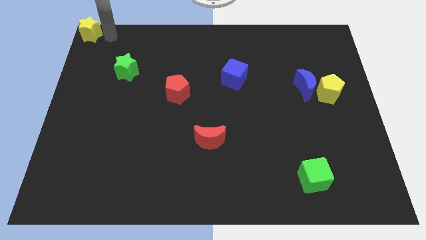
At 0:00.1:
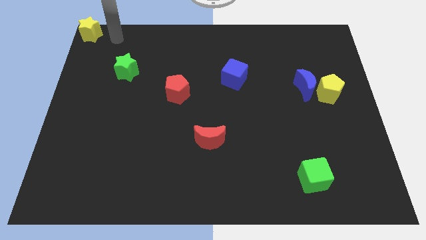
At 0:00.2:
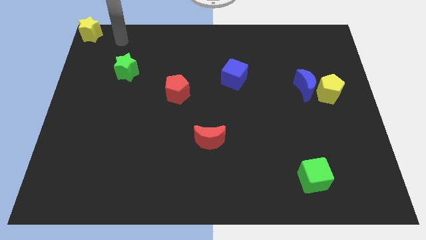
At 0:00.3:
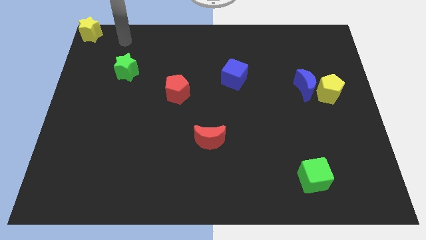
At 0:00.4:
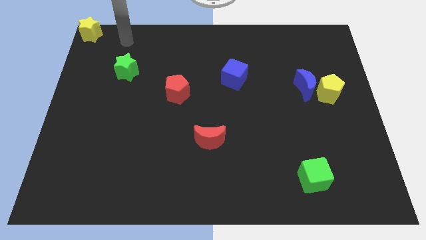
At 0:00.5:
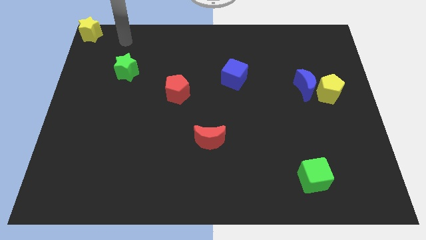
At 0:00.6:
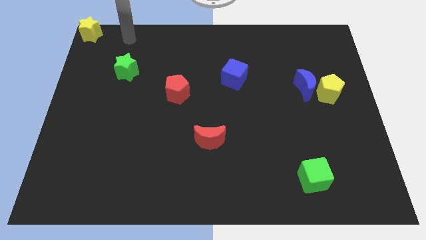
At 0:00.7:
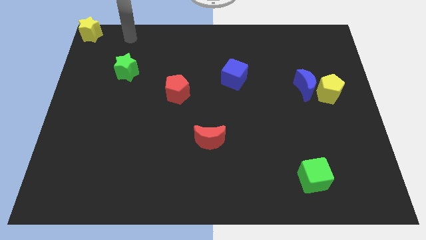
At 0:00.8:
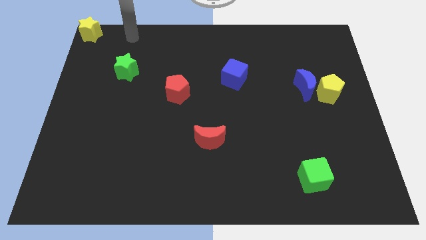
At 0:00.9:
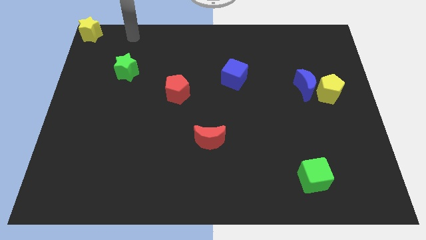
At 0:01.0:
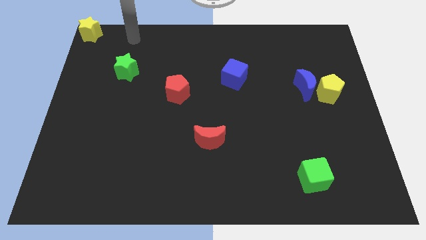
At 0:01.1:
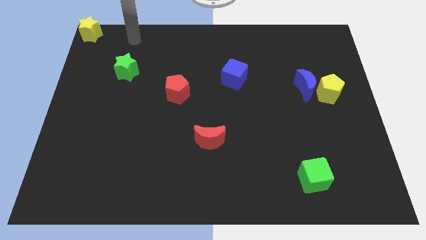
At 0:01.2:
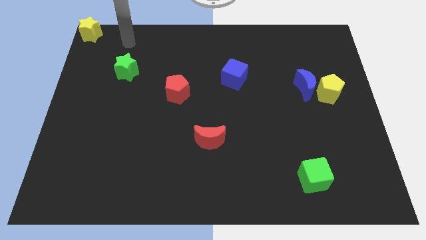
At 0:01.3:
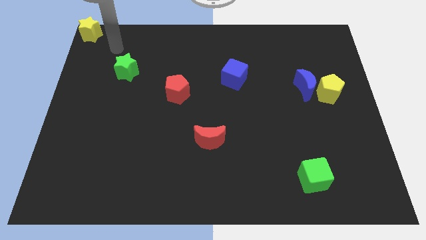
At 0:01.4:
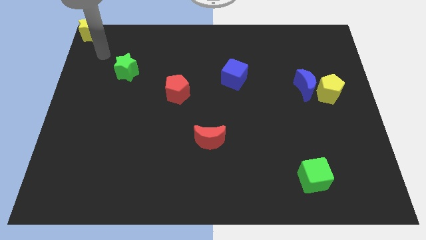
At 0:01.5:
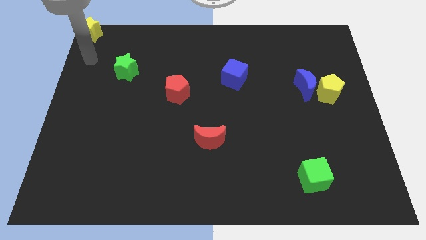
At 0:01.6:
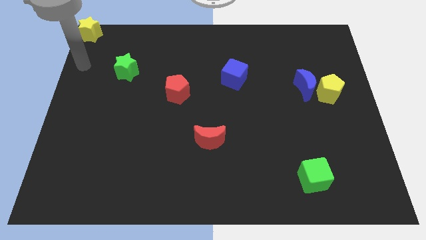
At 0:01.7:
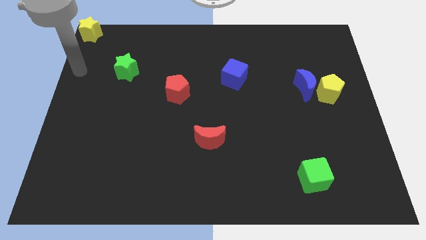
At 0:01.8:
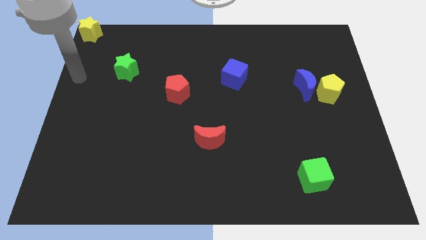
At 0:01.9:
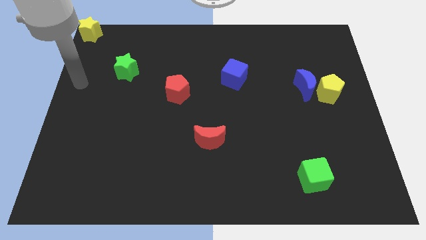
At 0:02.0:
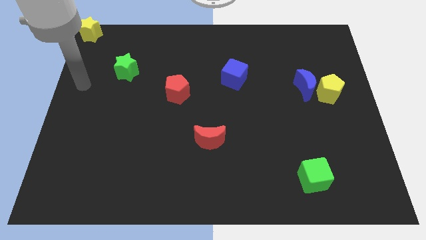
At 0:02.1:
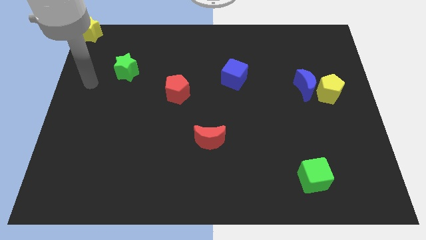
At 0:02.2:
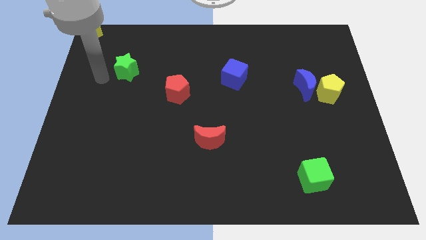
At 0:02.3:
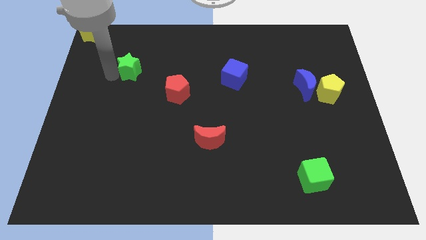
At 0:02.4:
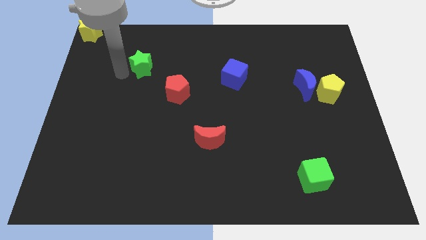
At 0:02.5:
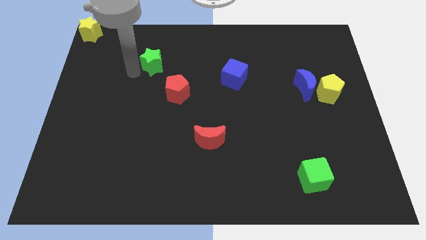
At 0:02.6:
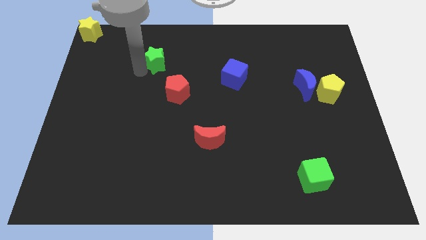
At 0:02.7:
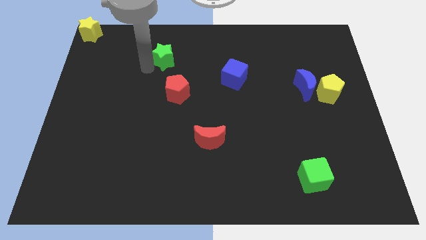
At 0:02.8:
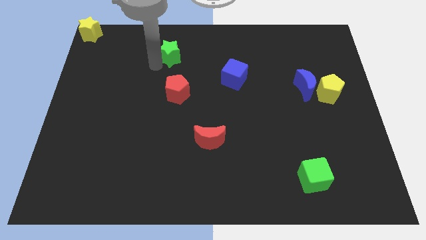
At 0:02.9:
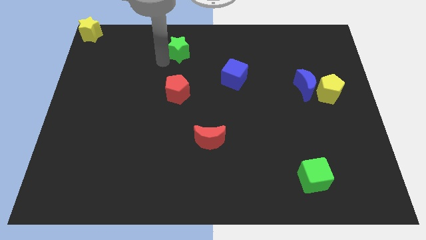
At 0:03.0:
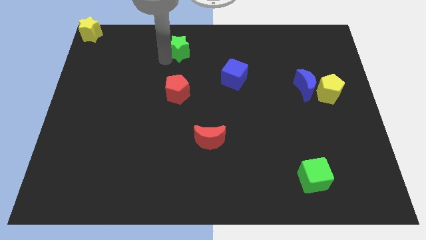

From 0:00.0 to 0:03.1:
place the green star diagonally to blue cube

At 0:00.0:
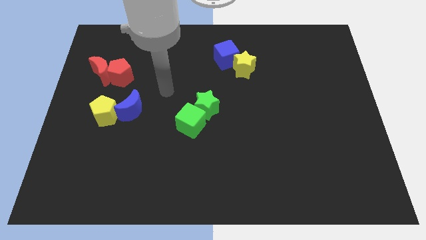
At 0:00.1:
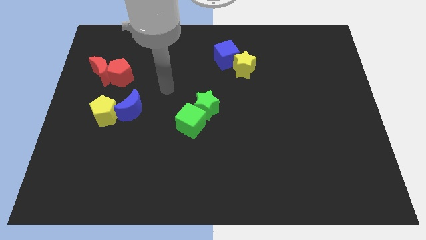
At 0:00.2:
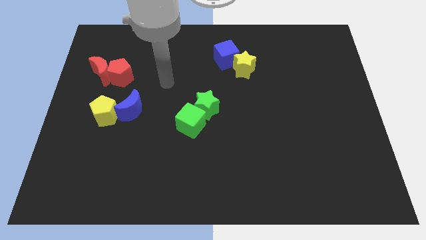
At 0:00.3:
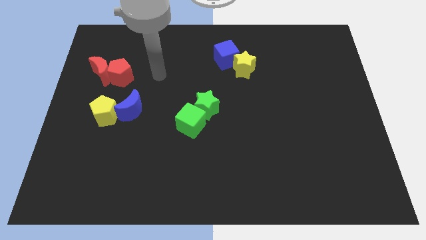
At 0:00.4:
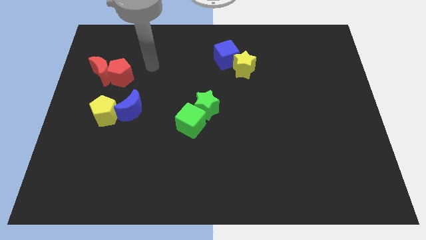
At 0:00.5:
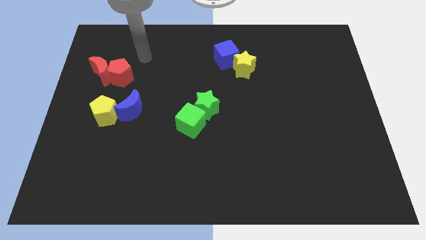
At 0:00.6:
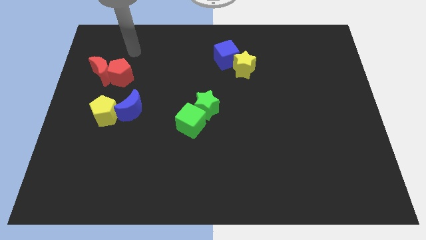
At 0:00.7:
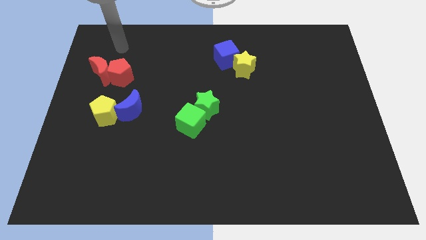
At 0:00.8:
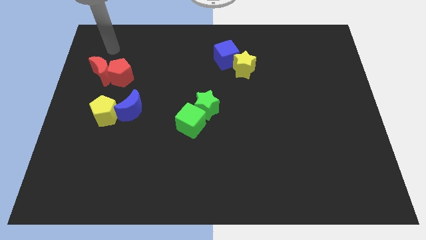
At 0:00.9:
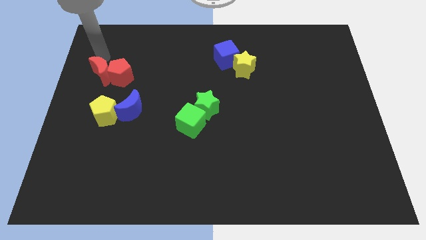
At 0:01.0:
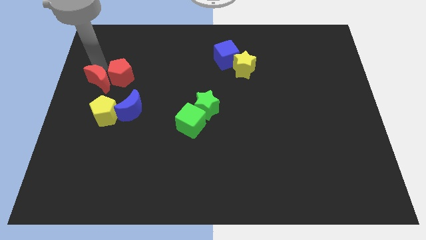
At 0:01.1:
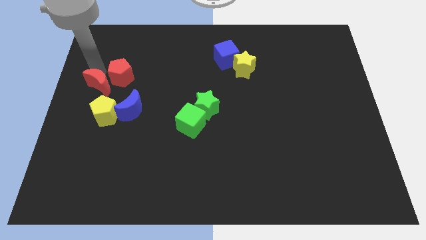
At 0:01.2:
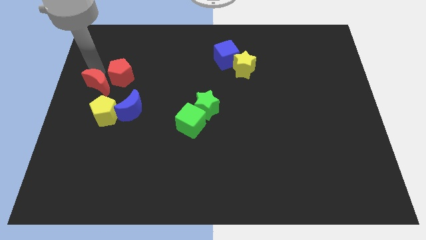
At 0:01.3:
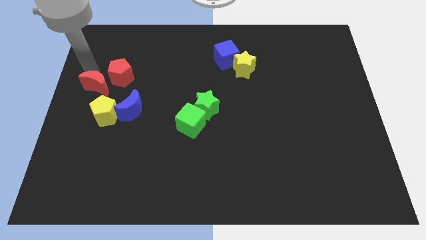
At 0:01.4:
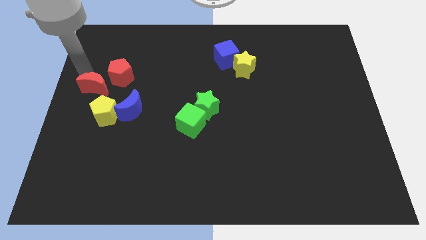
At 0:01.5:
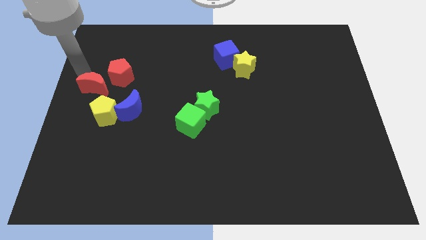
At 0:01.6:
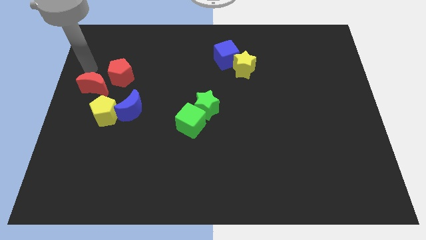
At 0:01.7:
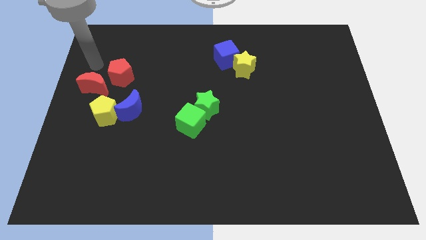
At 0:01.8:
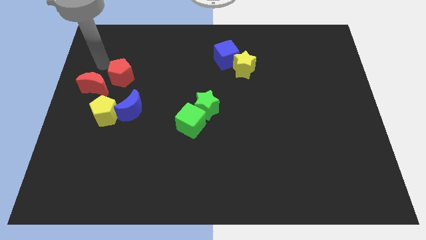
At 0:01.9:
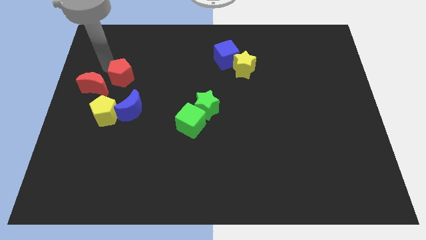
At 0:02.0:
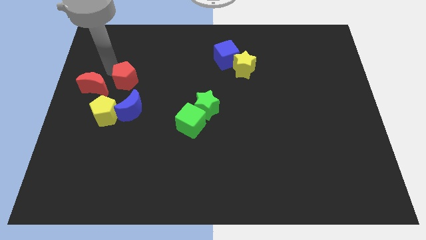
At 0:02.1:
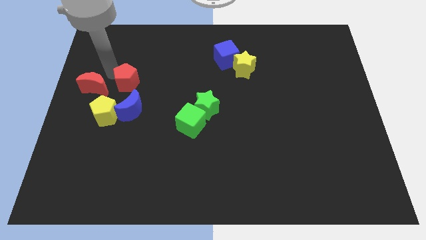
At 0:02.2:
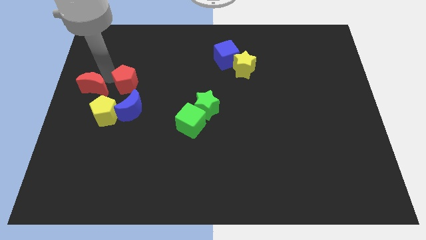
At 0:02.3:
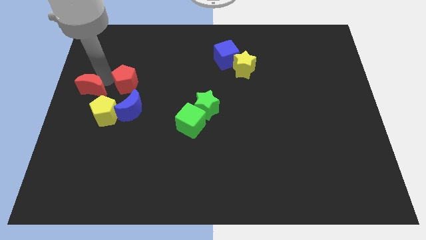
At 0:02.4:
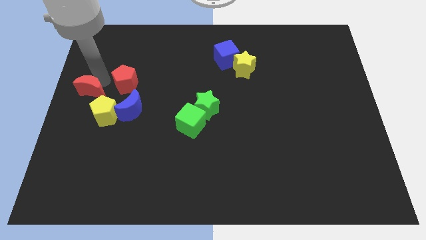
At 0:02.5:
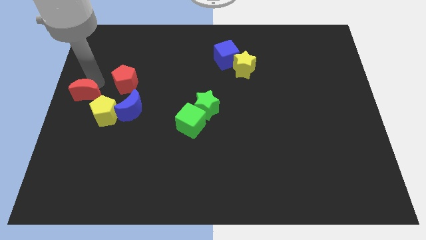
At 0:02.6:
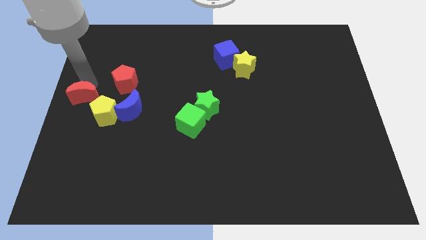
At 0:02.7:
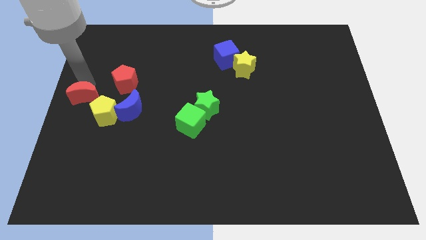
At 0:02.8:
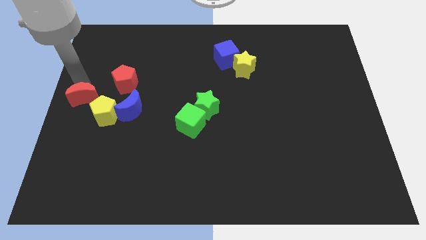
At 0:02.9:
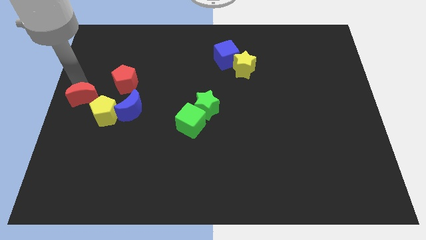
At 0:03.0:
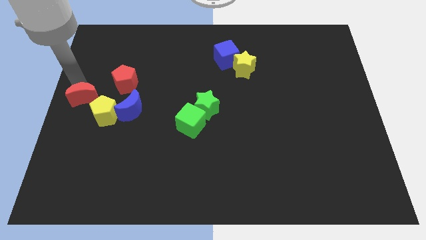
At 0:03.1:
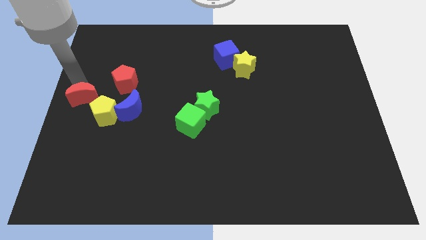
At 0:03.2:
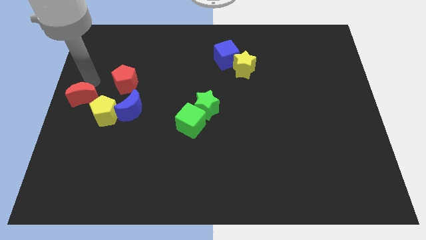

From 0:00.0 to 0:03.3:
separate the red crescent and red pentagon from each other

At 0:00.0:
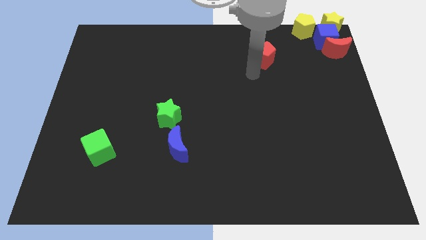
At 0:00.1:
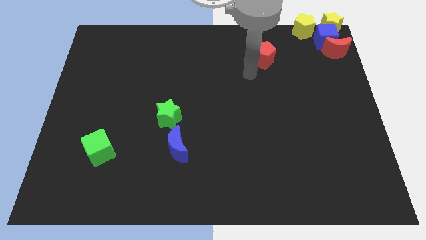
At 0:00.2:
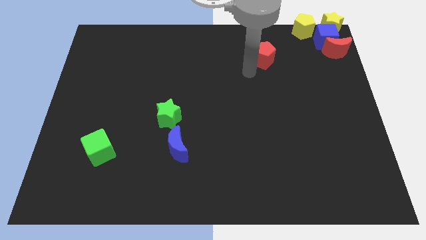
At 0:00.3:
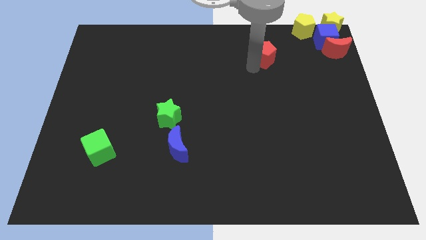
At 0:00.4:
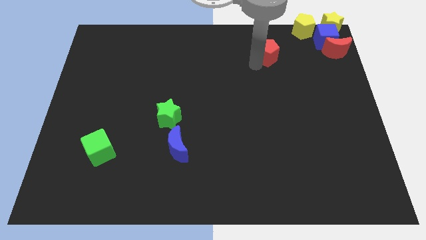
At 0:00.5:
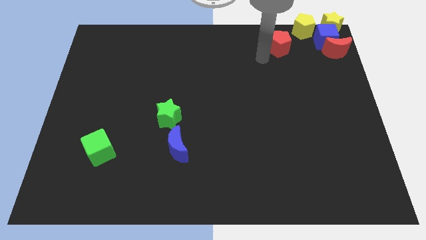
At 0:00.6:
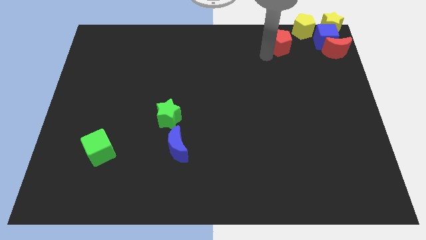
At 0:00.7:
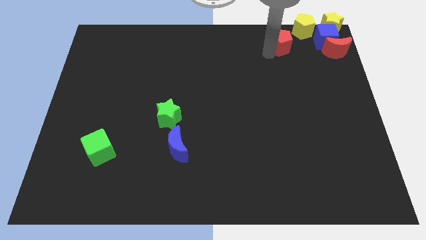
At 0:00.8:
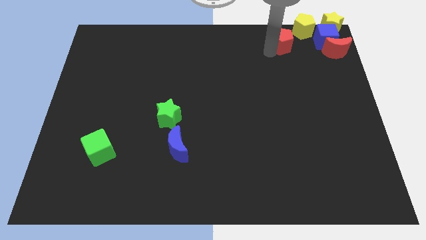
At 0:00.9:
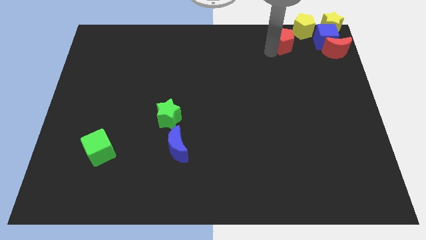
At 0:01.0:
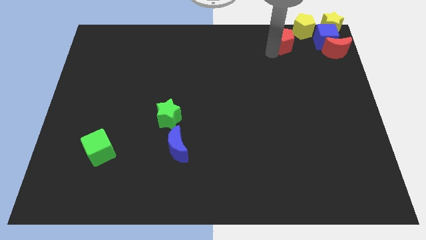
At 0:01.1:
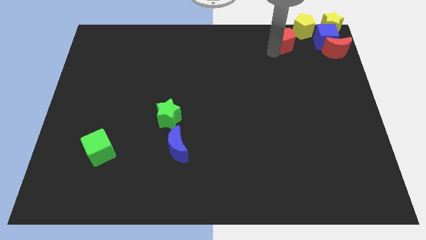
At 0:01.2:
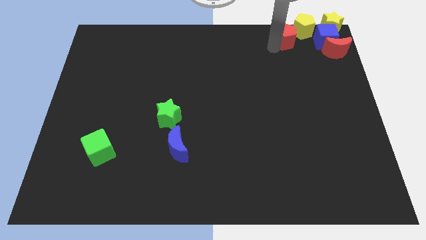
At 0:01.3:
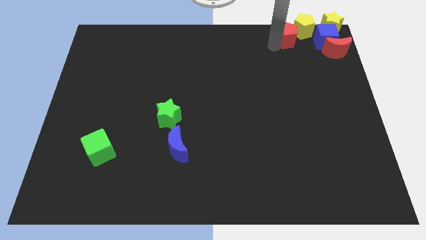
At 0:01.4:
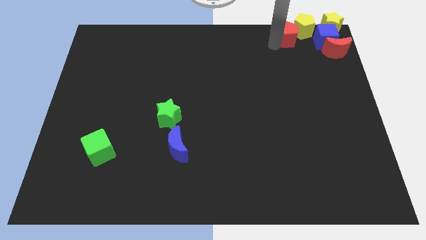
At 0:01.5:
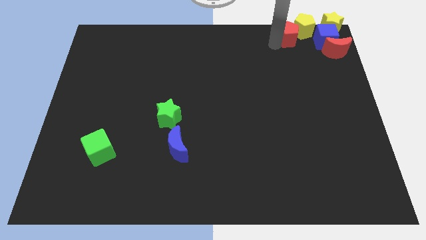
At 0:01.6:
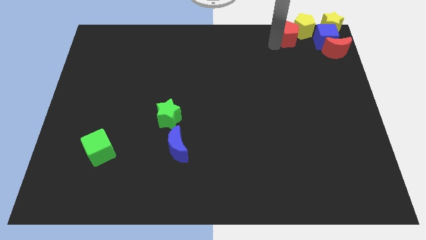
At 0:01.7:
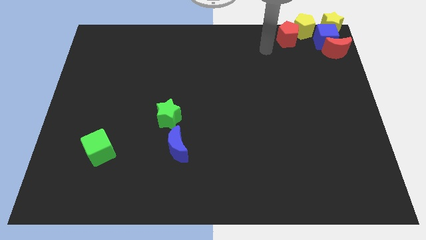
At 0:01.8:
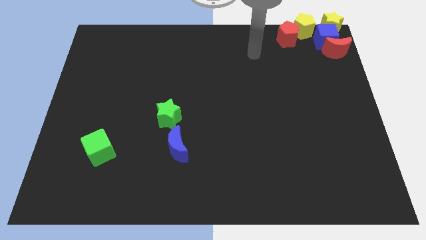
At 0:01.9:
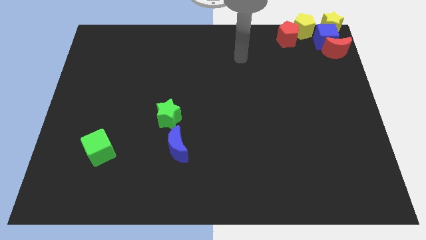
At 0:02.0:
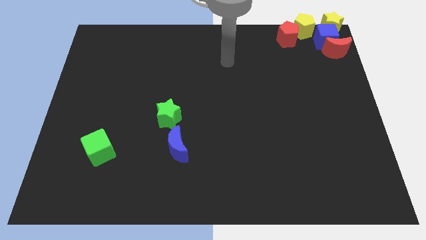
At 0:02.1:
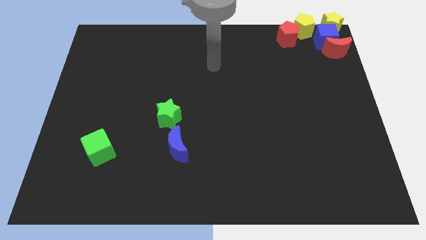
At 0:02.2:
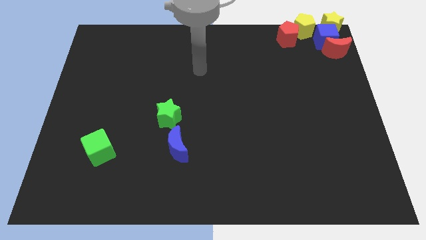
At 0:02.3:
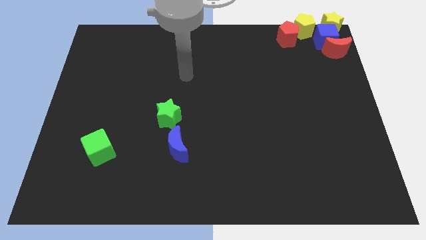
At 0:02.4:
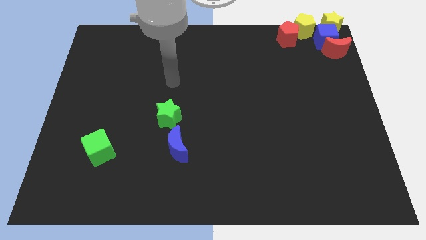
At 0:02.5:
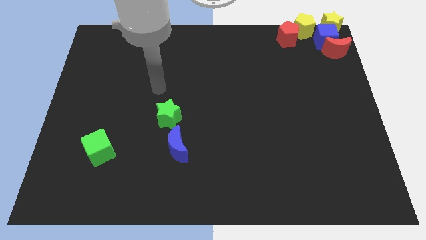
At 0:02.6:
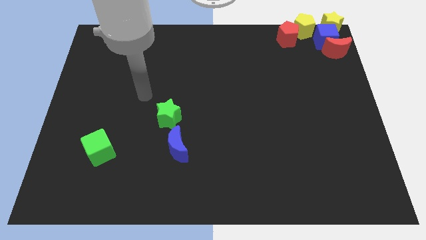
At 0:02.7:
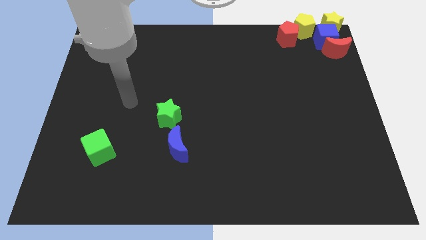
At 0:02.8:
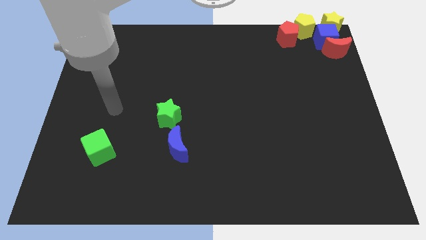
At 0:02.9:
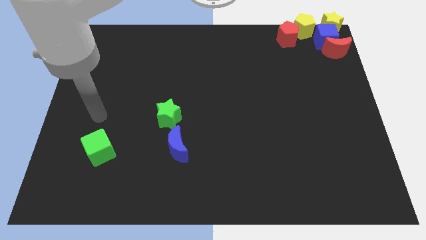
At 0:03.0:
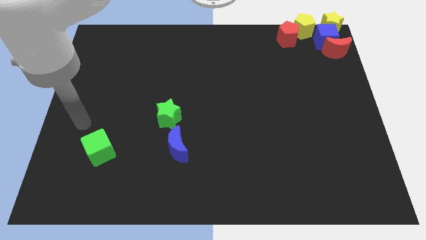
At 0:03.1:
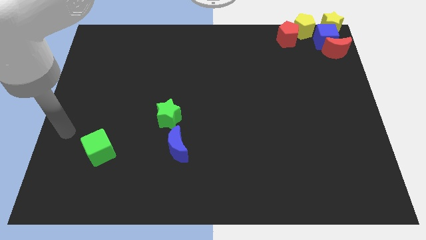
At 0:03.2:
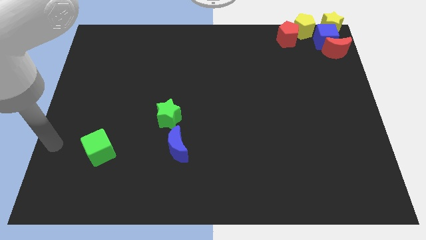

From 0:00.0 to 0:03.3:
place the red pentagon left to the yellow pentagon
